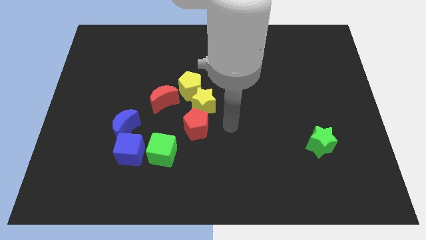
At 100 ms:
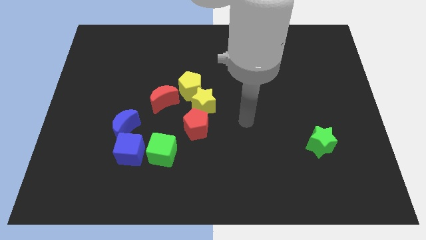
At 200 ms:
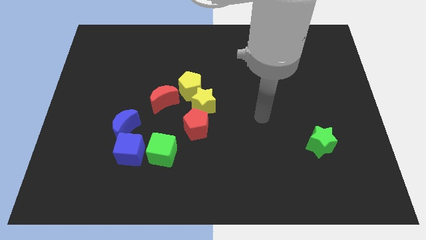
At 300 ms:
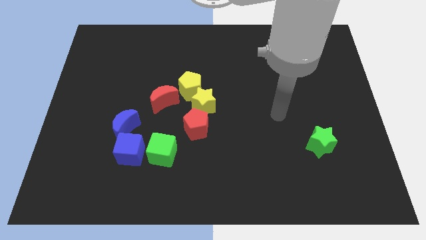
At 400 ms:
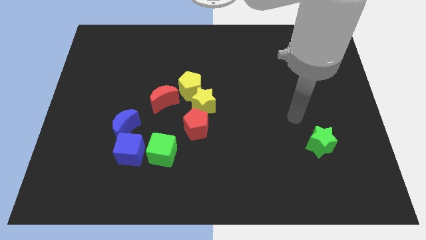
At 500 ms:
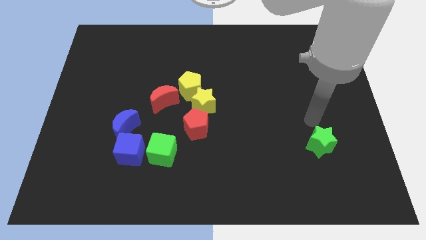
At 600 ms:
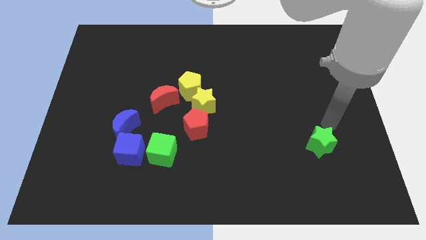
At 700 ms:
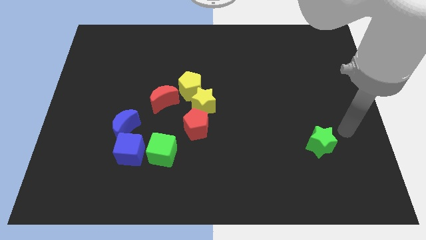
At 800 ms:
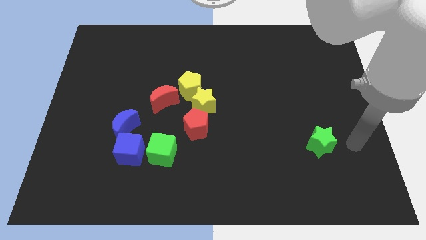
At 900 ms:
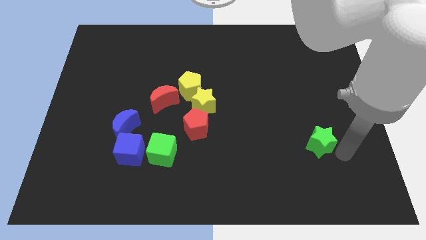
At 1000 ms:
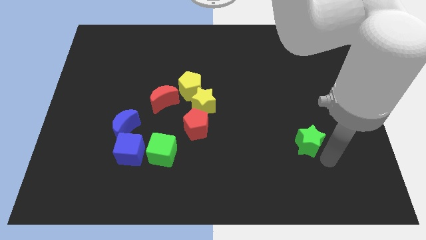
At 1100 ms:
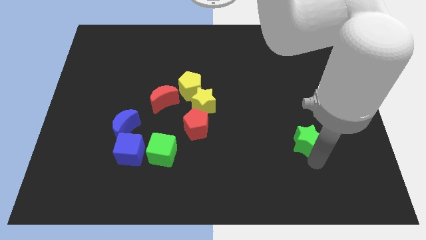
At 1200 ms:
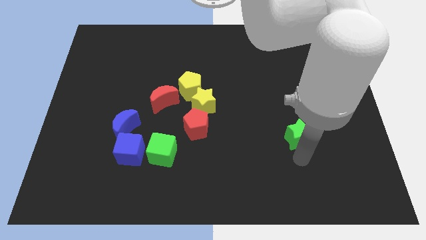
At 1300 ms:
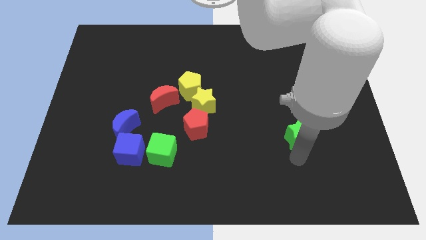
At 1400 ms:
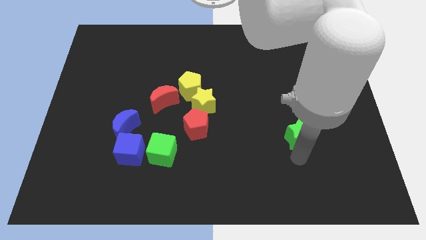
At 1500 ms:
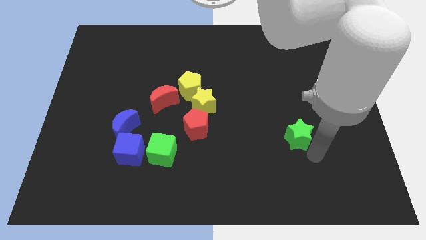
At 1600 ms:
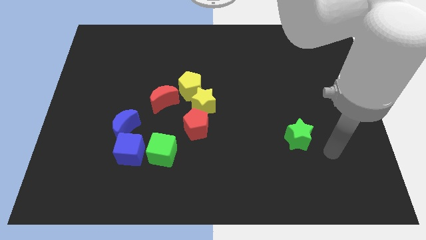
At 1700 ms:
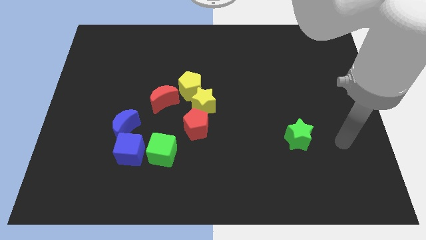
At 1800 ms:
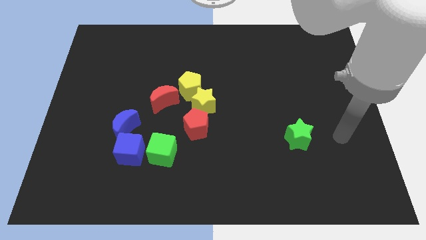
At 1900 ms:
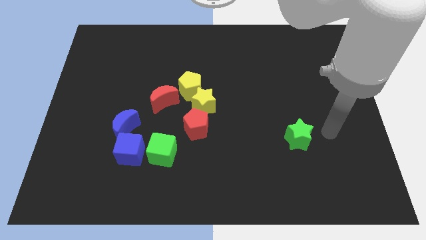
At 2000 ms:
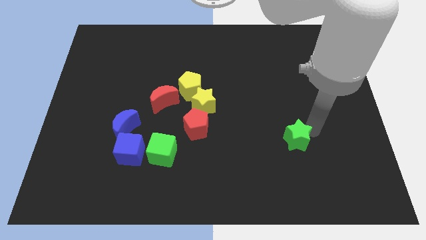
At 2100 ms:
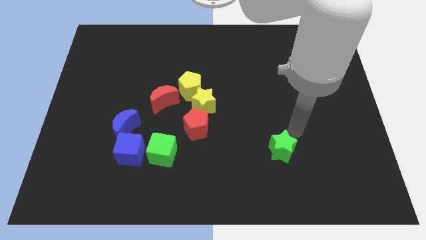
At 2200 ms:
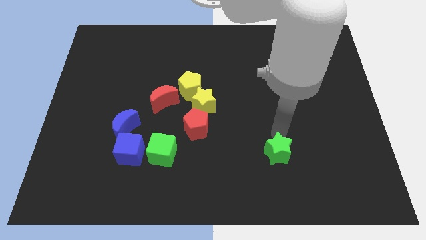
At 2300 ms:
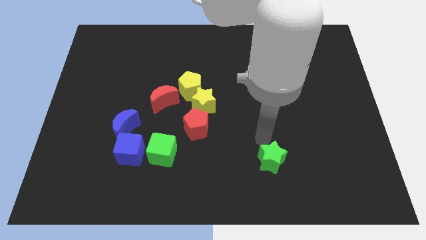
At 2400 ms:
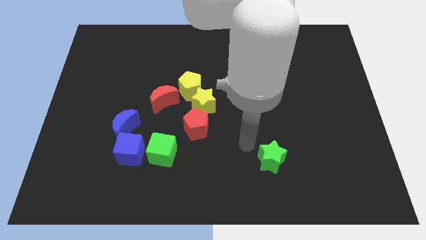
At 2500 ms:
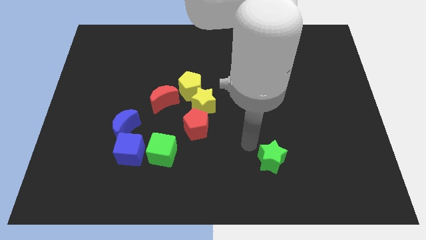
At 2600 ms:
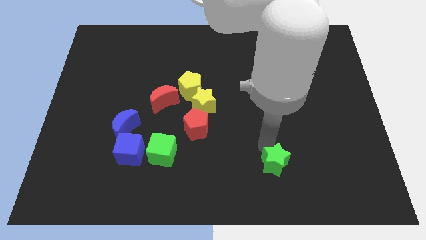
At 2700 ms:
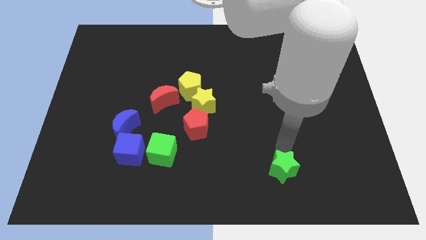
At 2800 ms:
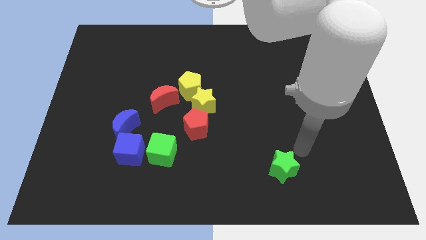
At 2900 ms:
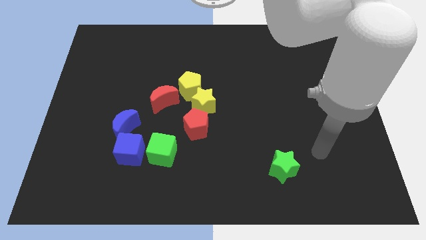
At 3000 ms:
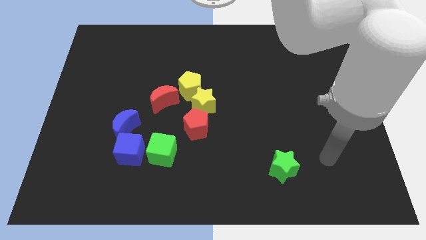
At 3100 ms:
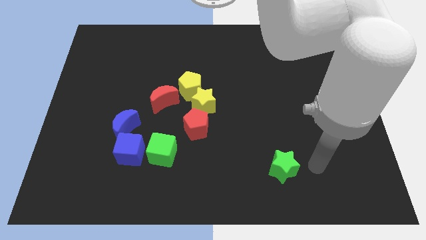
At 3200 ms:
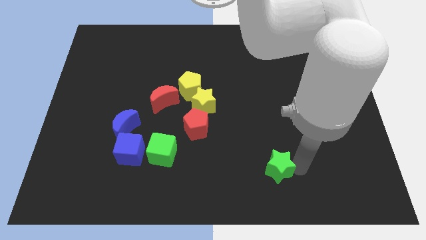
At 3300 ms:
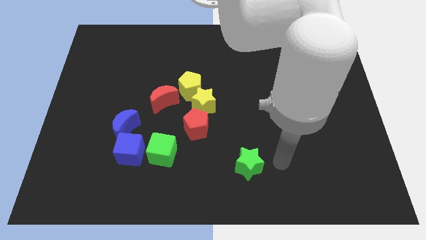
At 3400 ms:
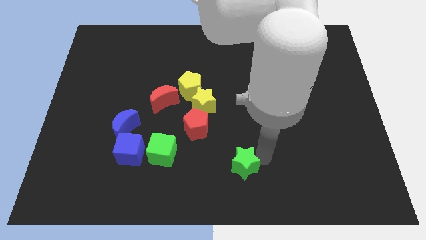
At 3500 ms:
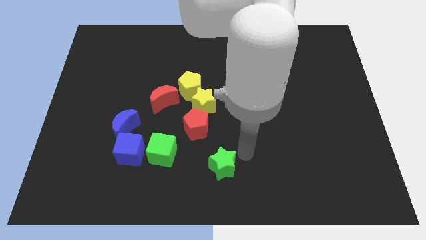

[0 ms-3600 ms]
drag the green star to the bottom center of the board

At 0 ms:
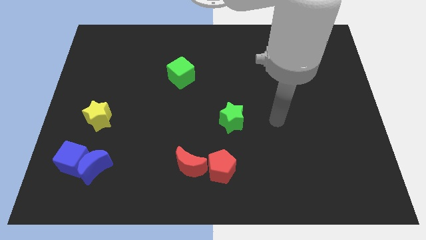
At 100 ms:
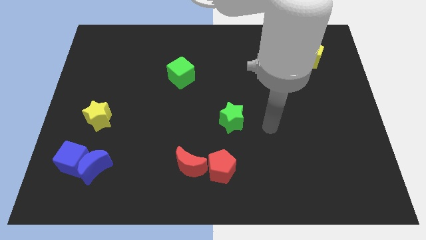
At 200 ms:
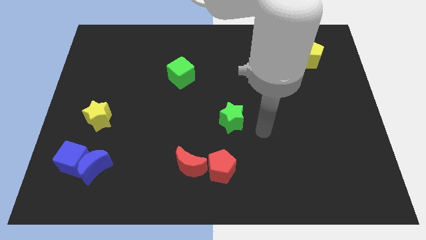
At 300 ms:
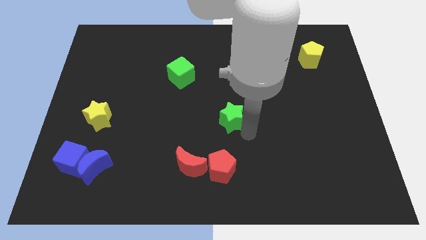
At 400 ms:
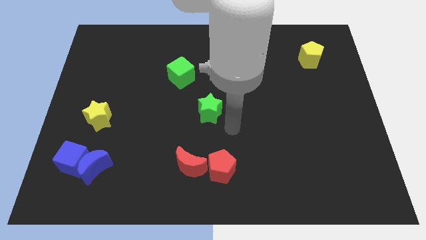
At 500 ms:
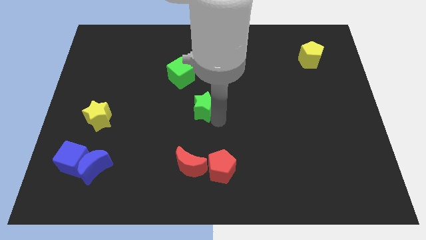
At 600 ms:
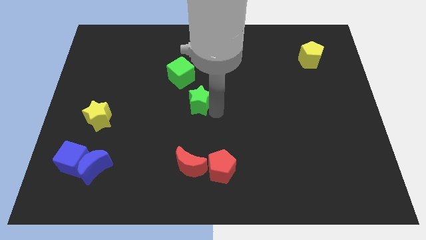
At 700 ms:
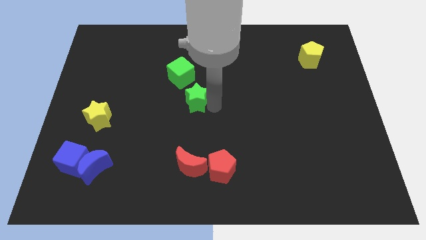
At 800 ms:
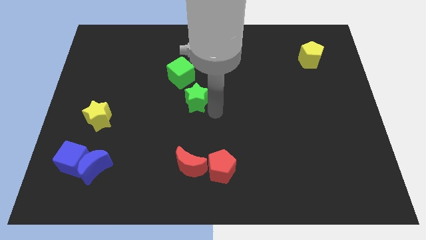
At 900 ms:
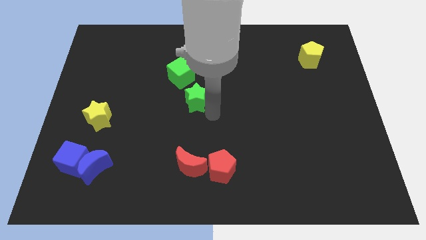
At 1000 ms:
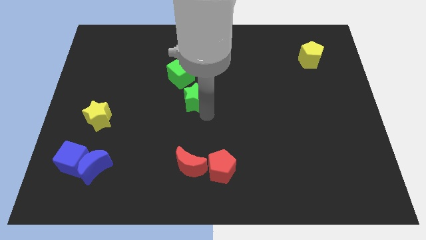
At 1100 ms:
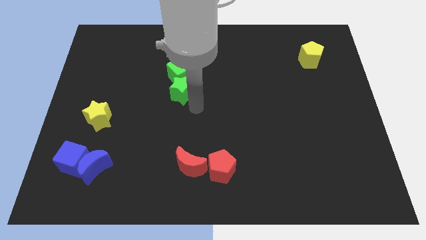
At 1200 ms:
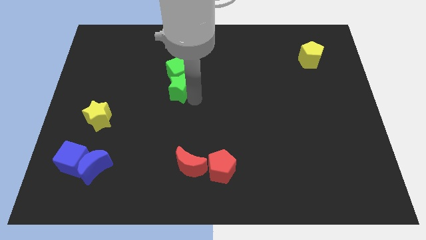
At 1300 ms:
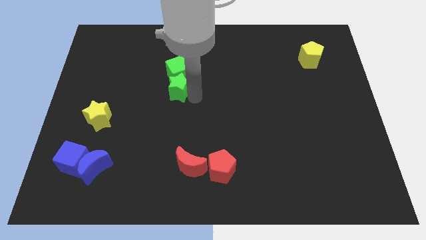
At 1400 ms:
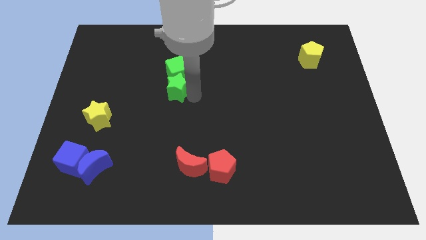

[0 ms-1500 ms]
push the green star to the bottom of the green cube

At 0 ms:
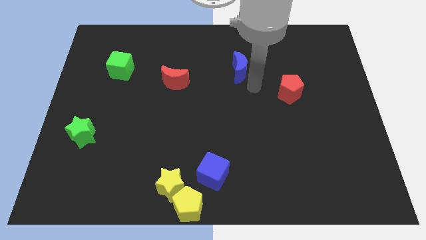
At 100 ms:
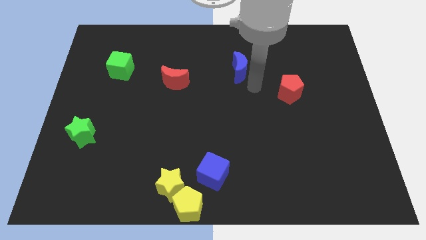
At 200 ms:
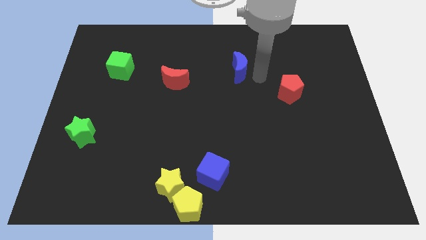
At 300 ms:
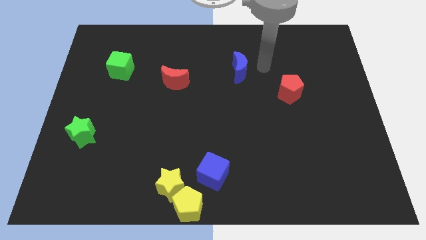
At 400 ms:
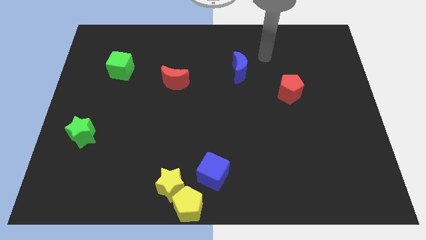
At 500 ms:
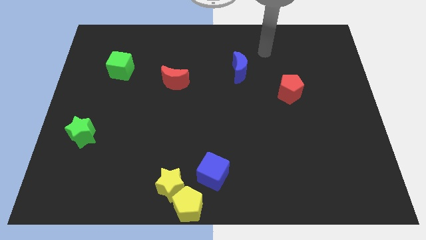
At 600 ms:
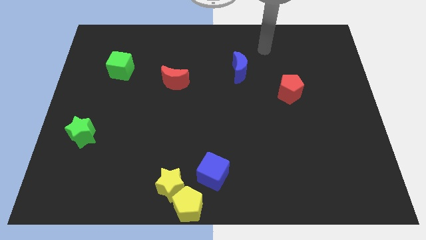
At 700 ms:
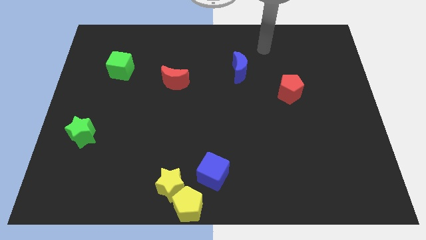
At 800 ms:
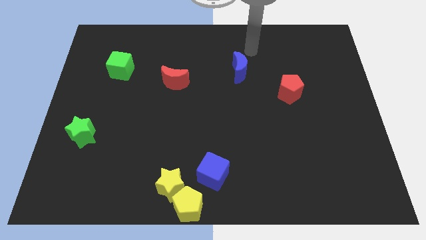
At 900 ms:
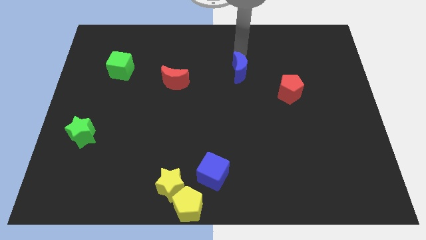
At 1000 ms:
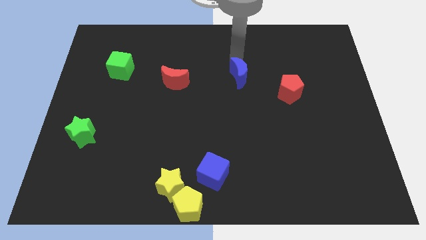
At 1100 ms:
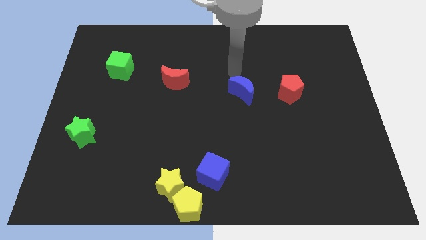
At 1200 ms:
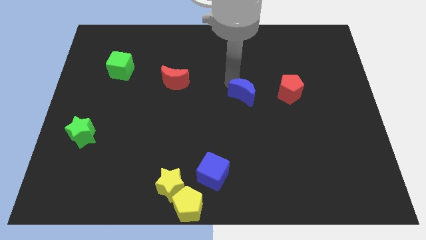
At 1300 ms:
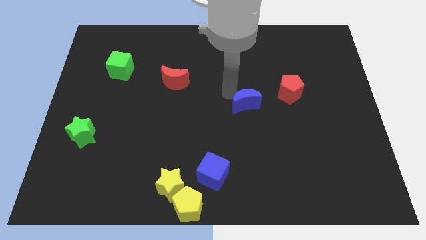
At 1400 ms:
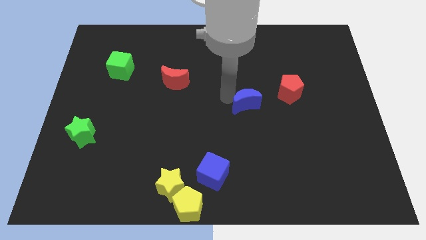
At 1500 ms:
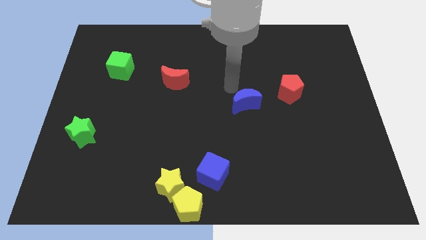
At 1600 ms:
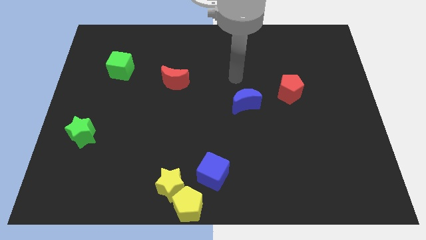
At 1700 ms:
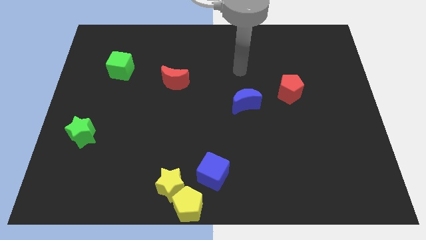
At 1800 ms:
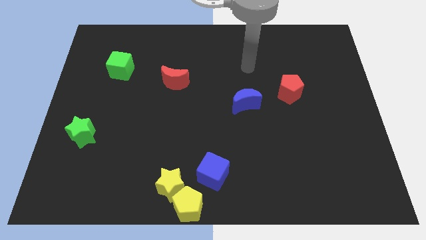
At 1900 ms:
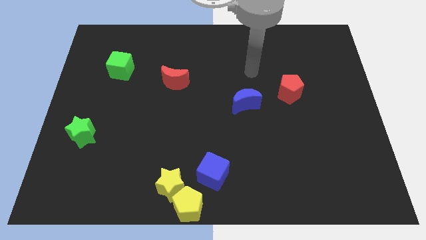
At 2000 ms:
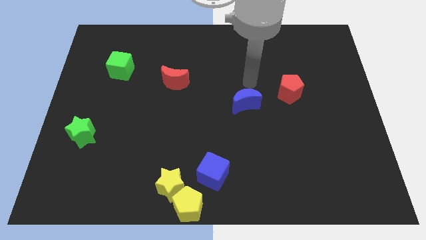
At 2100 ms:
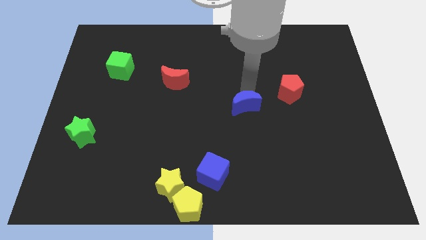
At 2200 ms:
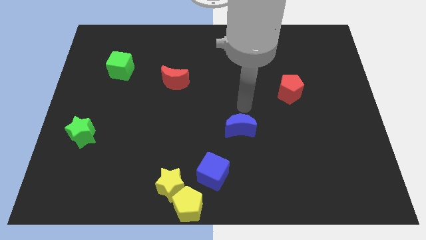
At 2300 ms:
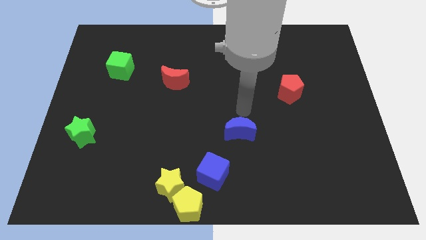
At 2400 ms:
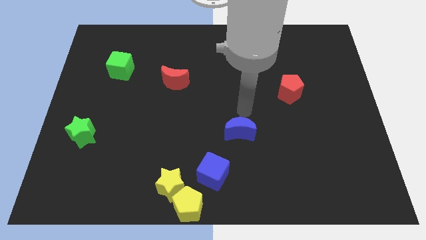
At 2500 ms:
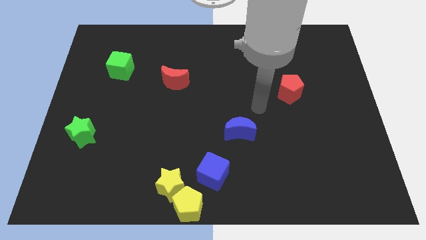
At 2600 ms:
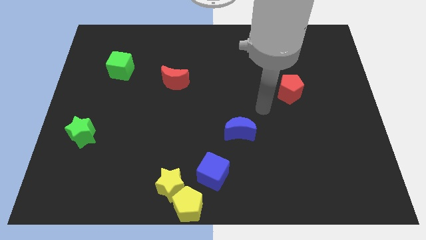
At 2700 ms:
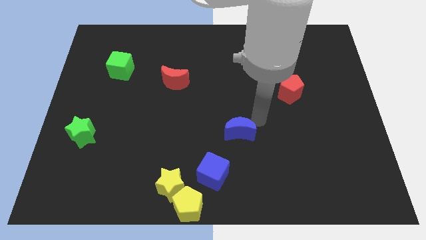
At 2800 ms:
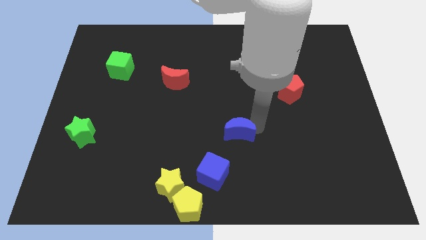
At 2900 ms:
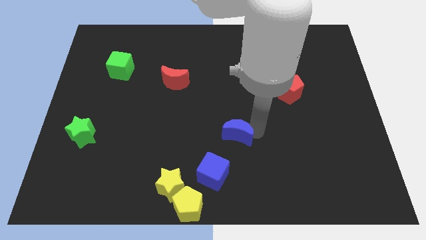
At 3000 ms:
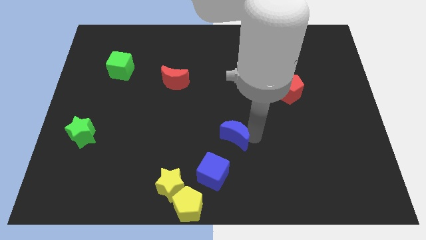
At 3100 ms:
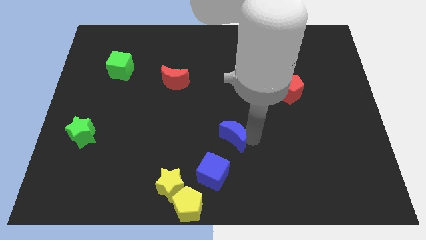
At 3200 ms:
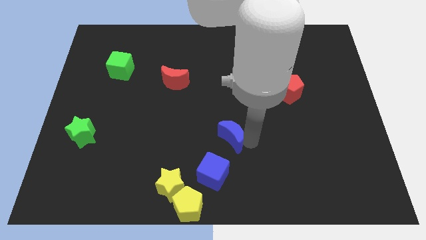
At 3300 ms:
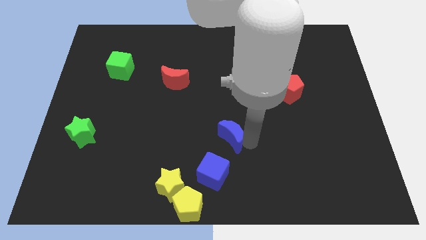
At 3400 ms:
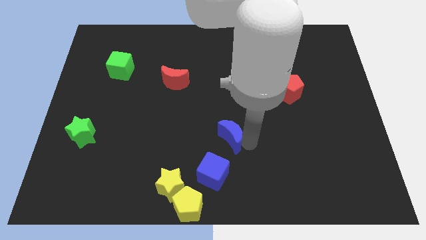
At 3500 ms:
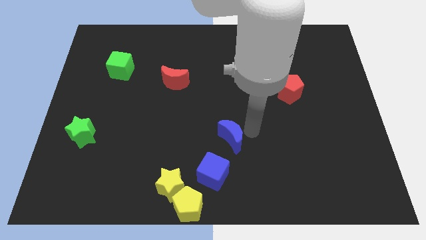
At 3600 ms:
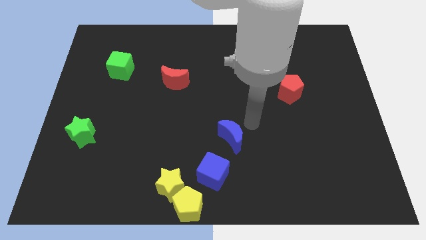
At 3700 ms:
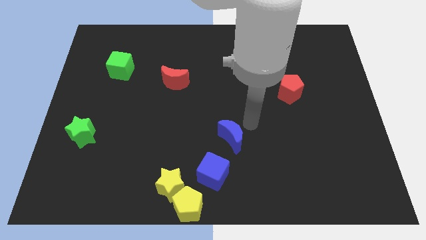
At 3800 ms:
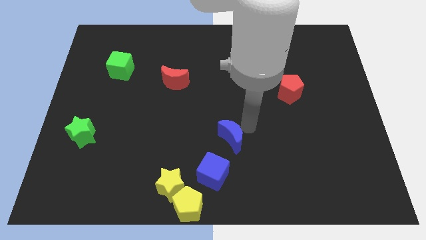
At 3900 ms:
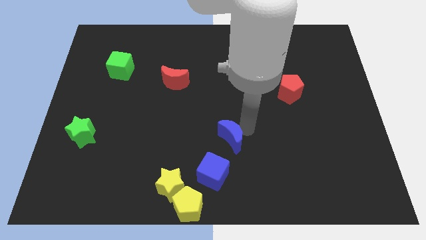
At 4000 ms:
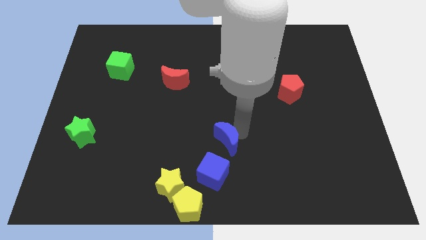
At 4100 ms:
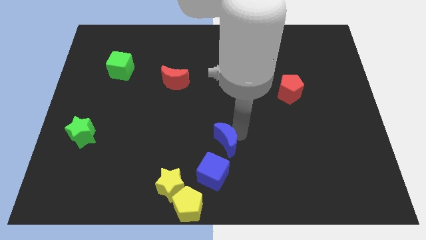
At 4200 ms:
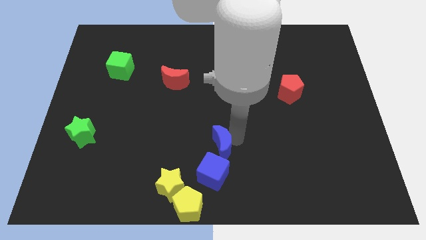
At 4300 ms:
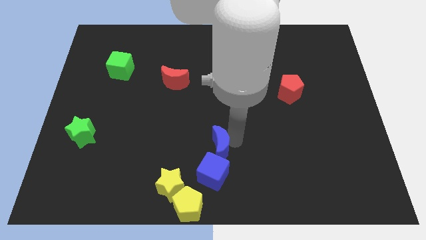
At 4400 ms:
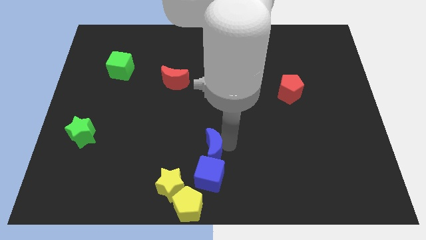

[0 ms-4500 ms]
push the blue crescent to the top of the blue cube
